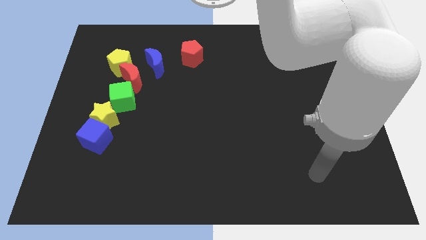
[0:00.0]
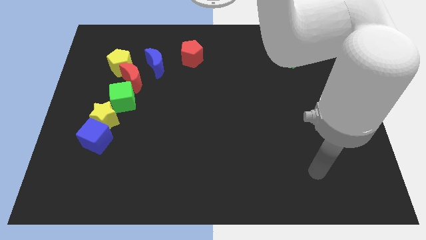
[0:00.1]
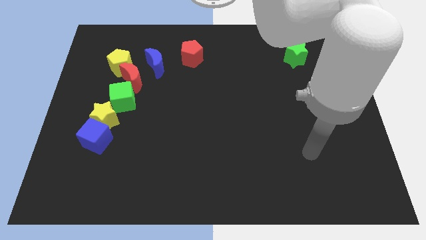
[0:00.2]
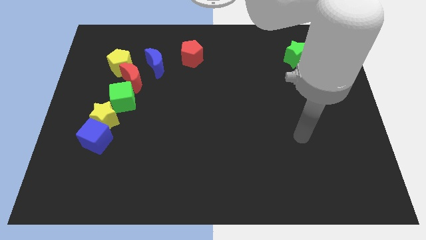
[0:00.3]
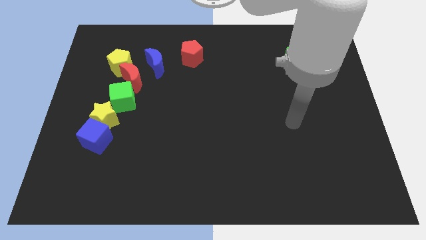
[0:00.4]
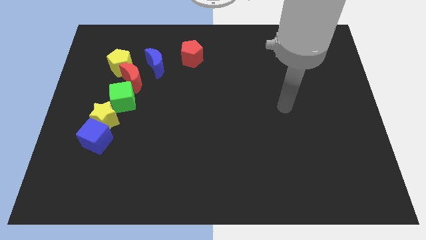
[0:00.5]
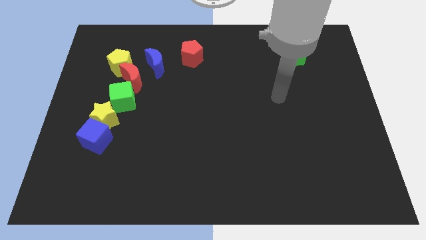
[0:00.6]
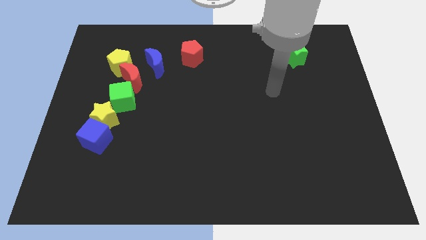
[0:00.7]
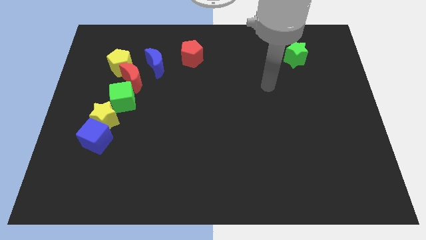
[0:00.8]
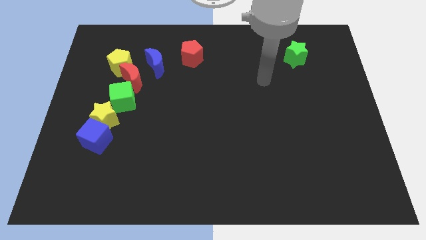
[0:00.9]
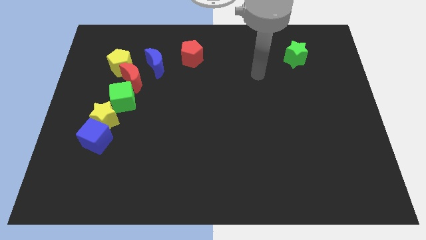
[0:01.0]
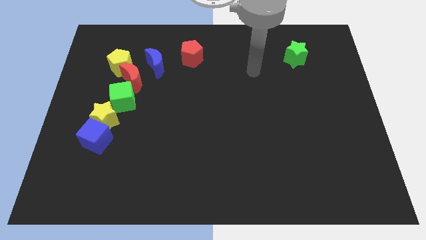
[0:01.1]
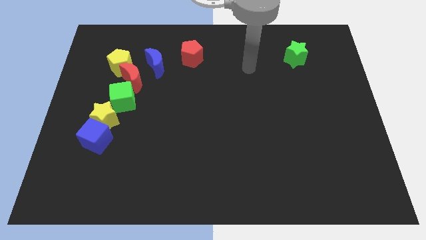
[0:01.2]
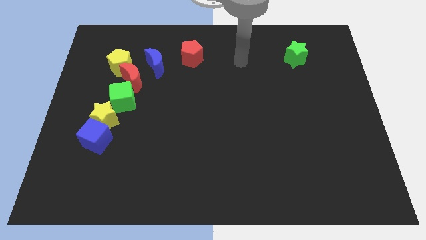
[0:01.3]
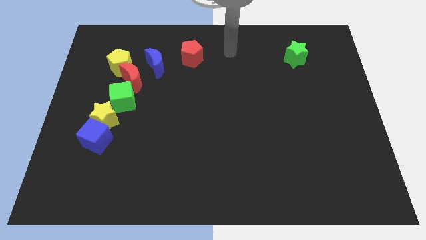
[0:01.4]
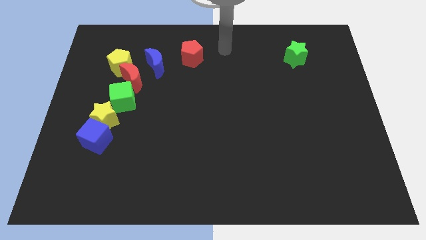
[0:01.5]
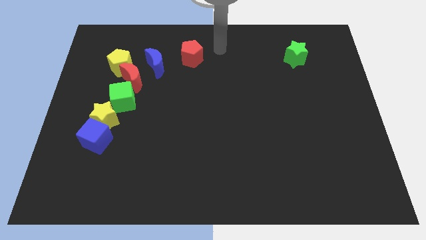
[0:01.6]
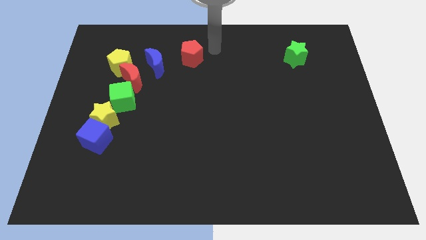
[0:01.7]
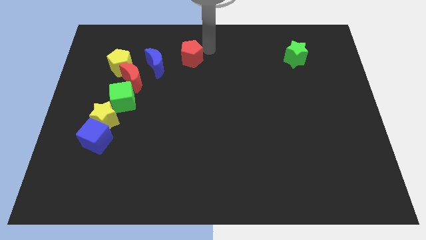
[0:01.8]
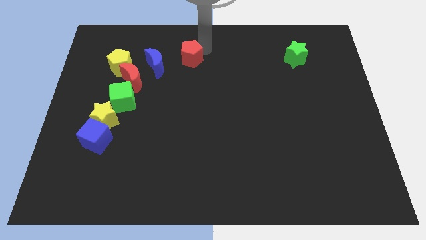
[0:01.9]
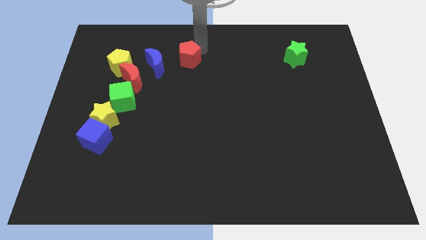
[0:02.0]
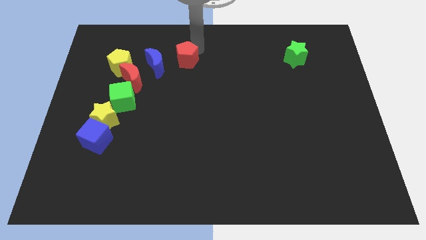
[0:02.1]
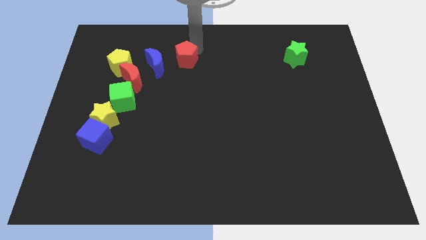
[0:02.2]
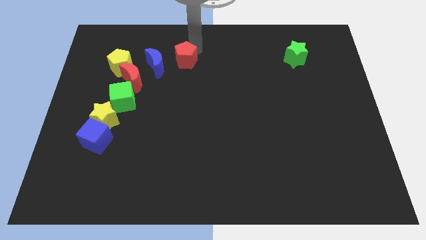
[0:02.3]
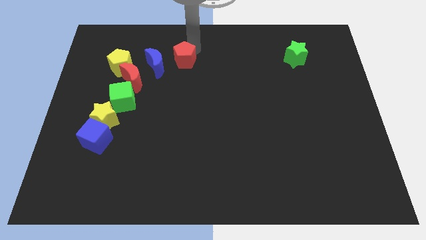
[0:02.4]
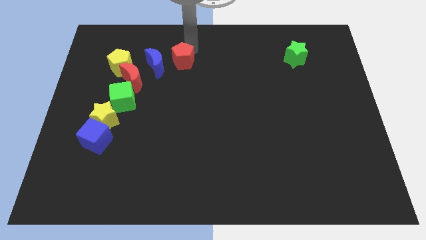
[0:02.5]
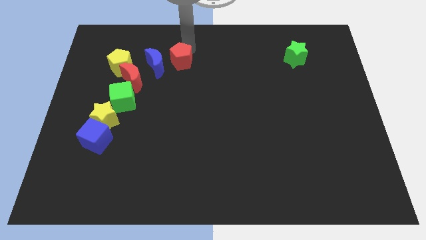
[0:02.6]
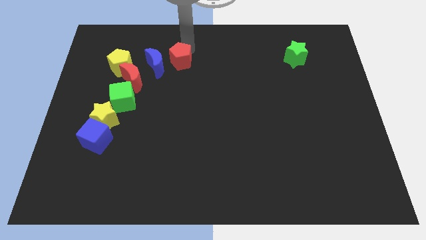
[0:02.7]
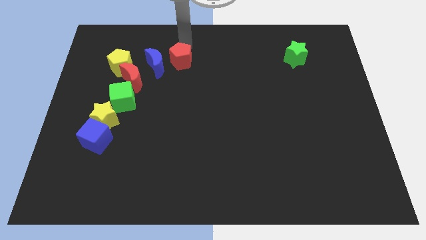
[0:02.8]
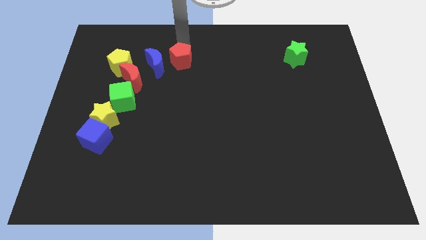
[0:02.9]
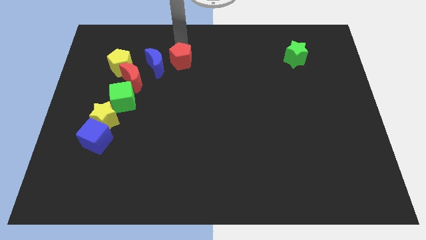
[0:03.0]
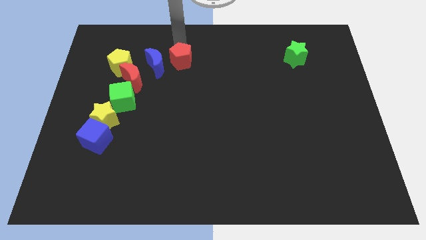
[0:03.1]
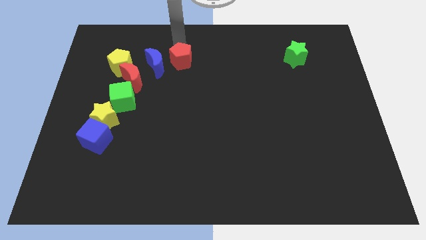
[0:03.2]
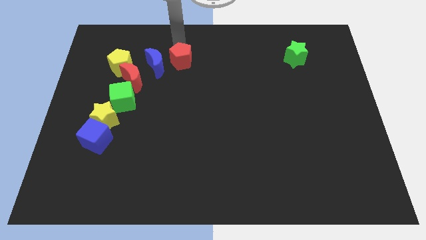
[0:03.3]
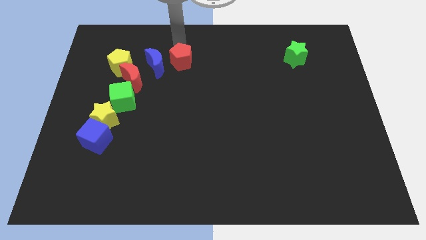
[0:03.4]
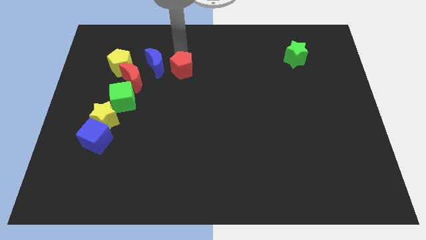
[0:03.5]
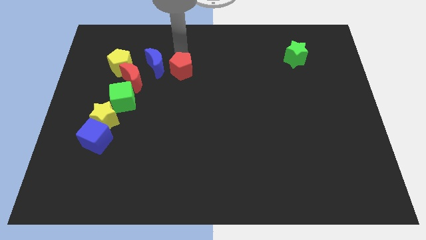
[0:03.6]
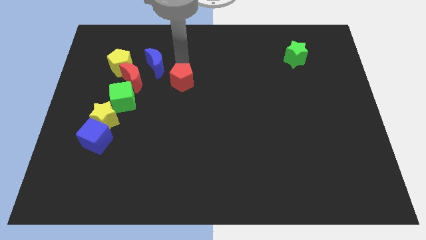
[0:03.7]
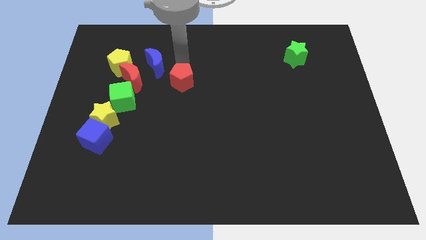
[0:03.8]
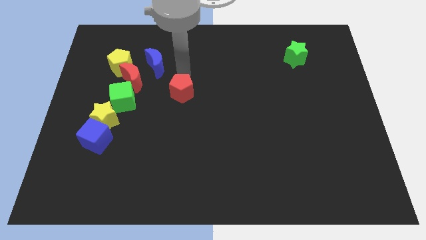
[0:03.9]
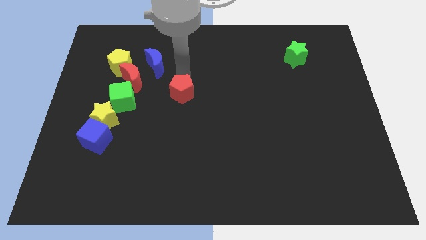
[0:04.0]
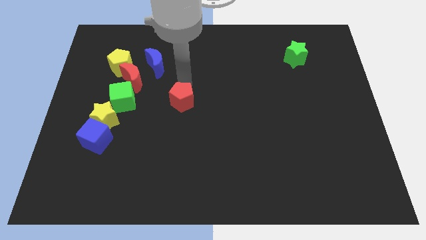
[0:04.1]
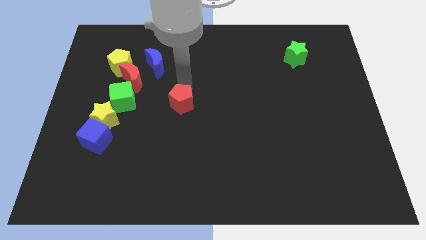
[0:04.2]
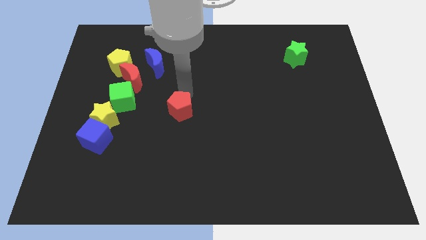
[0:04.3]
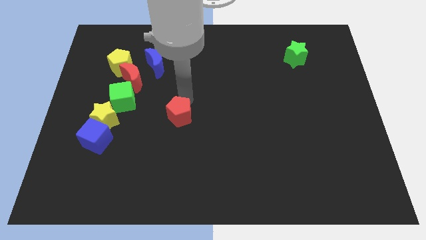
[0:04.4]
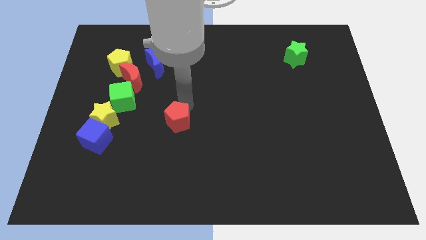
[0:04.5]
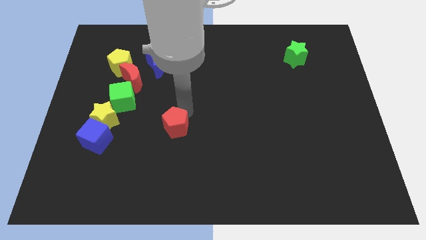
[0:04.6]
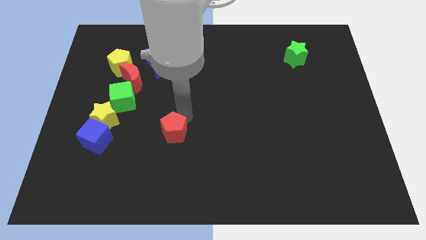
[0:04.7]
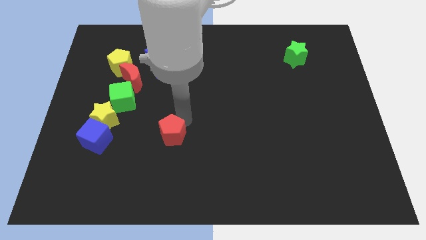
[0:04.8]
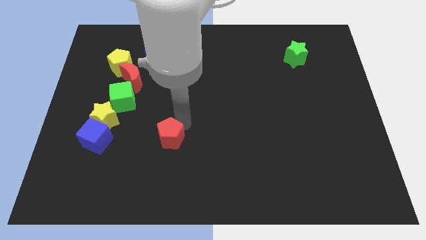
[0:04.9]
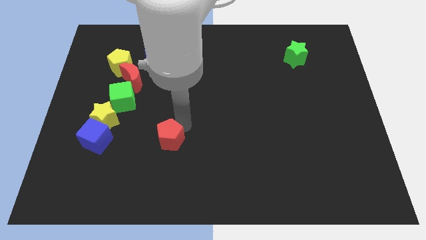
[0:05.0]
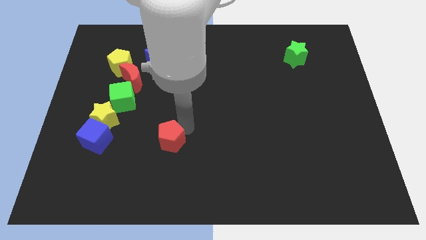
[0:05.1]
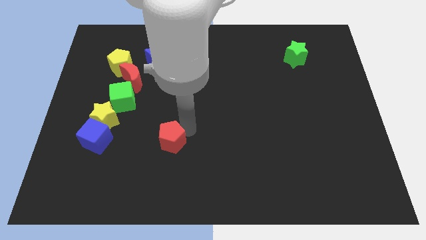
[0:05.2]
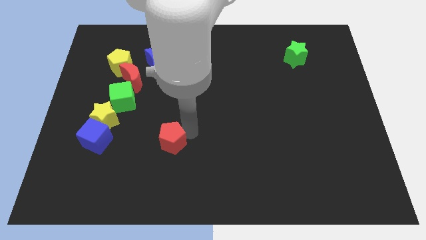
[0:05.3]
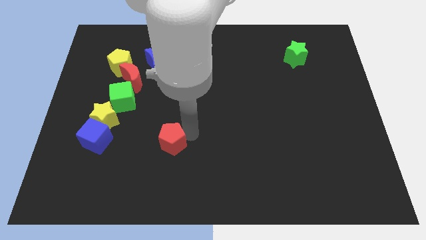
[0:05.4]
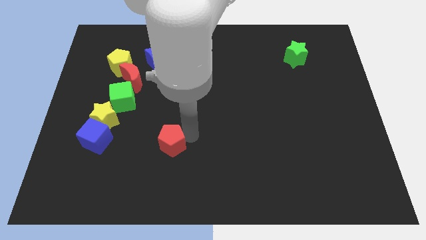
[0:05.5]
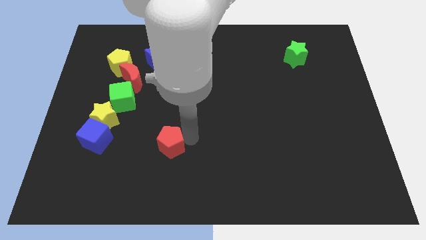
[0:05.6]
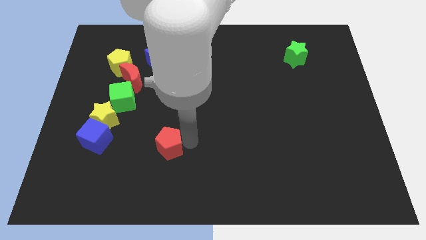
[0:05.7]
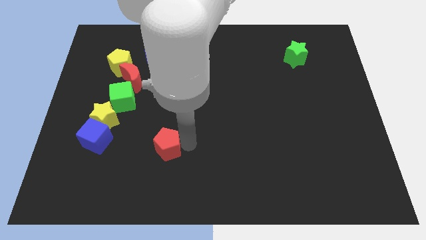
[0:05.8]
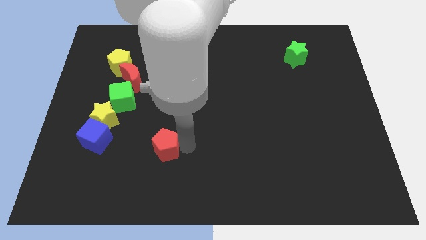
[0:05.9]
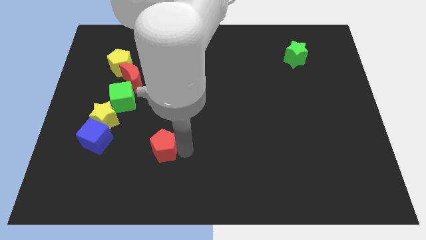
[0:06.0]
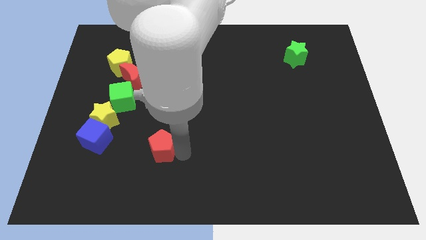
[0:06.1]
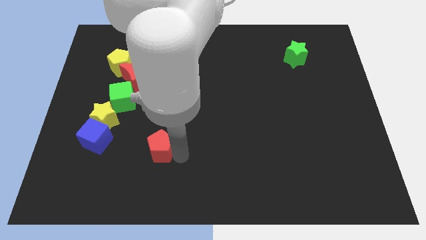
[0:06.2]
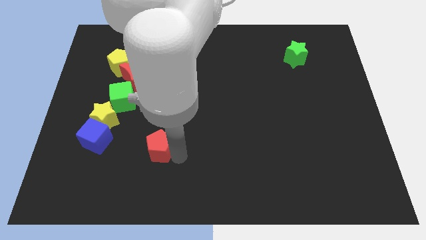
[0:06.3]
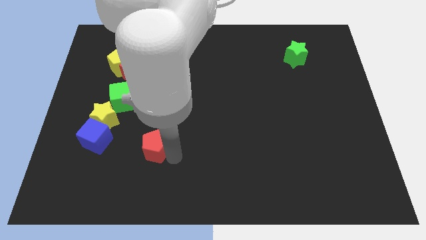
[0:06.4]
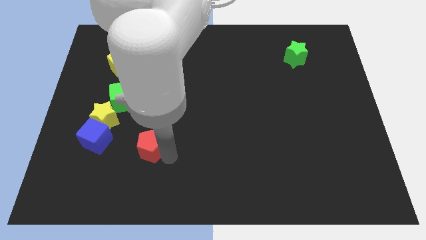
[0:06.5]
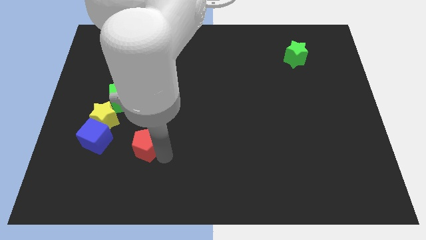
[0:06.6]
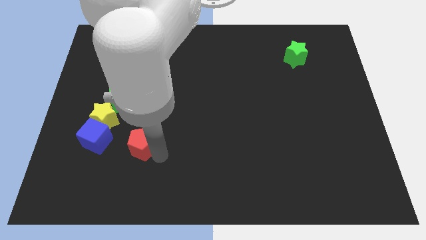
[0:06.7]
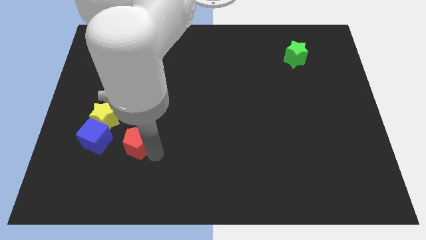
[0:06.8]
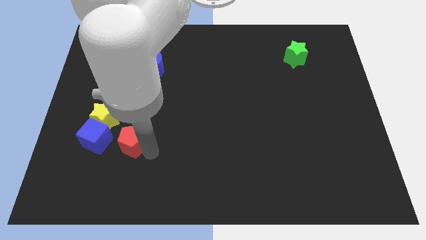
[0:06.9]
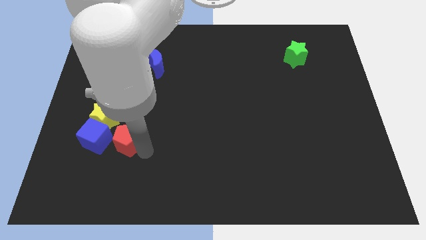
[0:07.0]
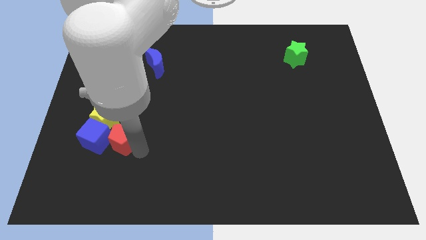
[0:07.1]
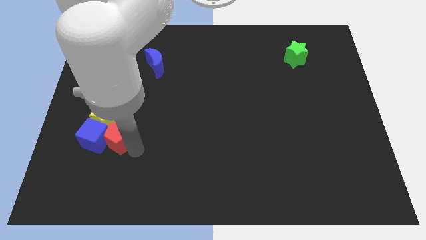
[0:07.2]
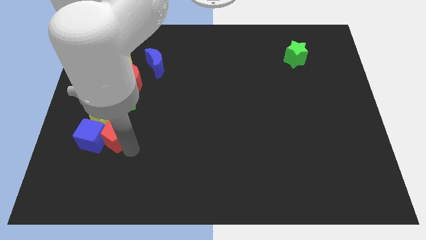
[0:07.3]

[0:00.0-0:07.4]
put the red pentagon close to the blue cube

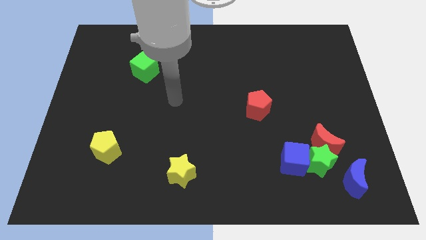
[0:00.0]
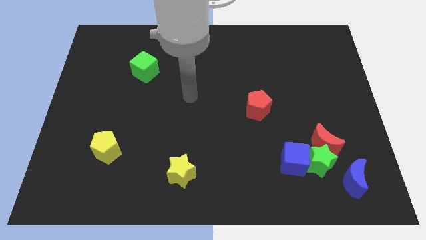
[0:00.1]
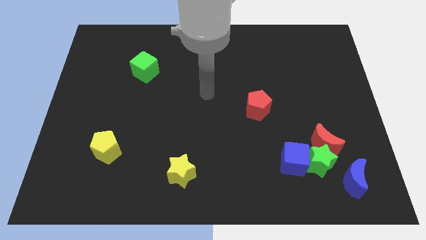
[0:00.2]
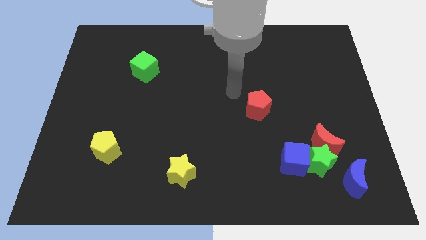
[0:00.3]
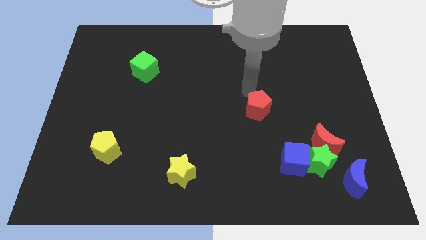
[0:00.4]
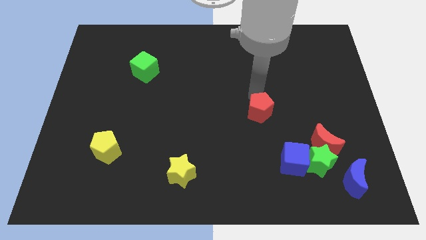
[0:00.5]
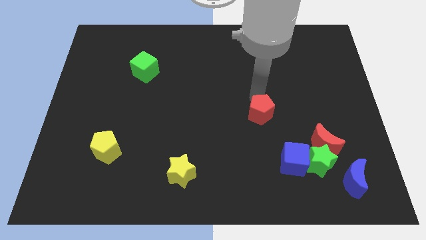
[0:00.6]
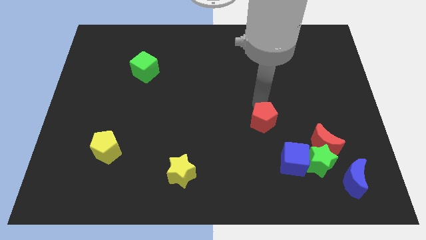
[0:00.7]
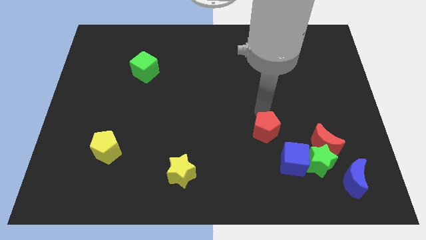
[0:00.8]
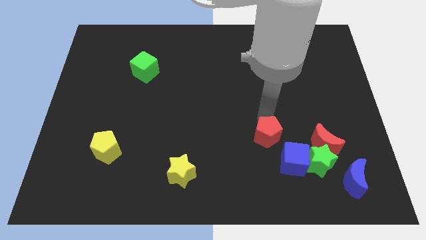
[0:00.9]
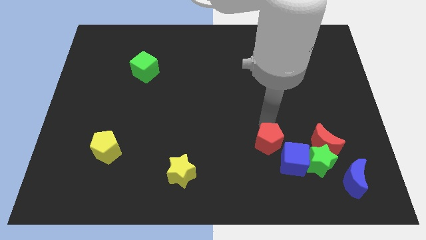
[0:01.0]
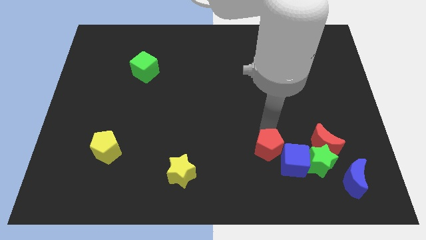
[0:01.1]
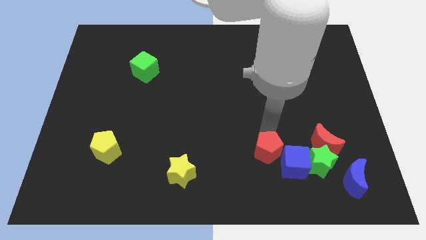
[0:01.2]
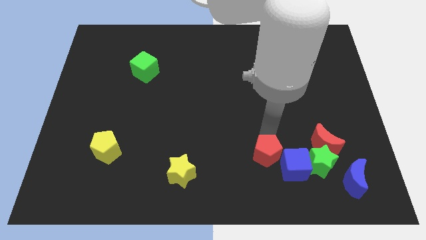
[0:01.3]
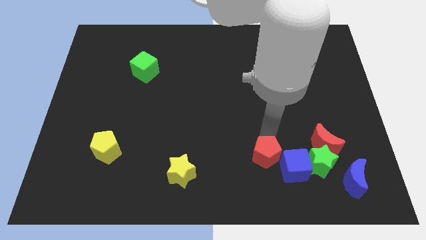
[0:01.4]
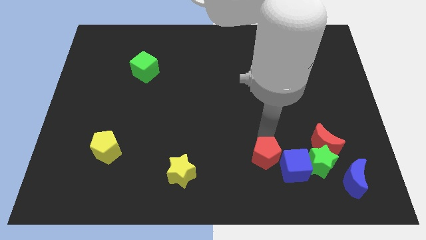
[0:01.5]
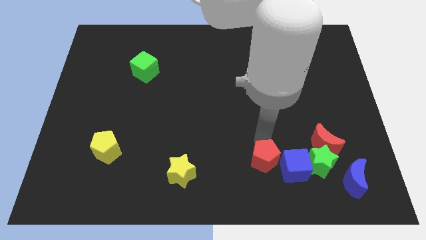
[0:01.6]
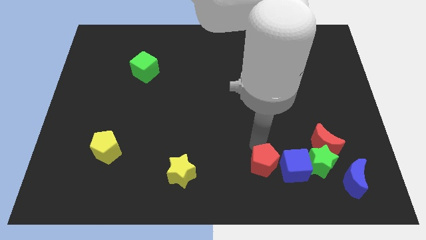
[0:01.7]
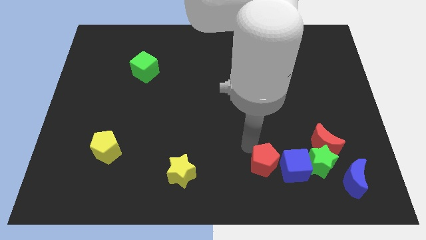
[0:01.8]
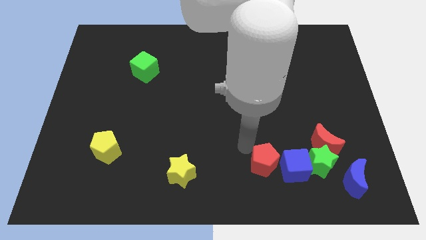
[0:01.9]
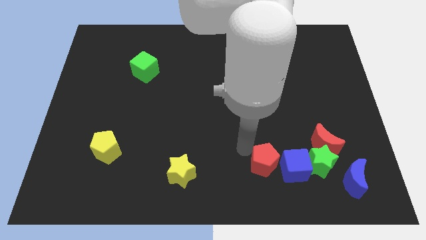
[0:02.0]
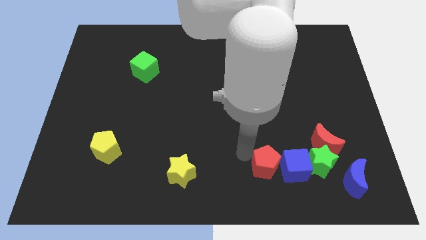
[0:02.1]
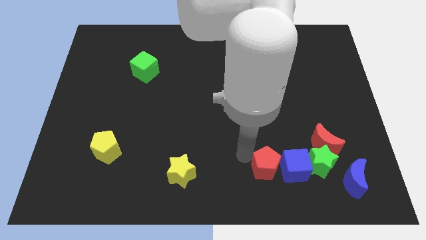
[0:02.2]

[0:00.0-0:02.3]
slide the red pentagon next to the blue cube
